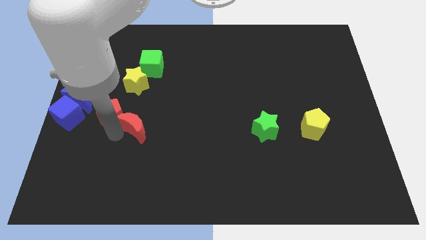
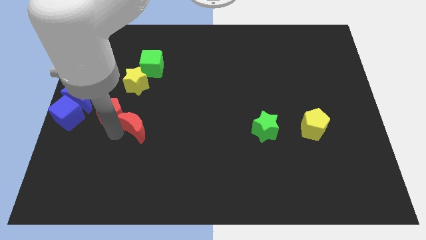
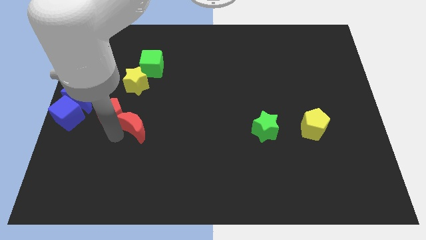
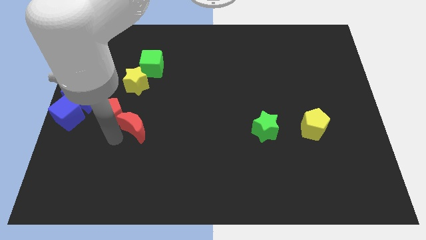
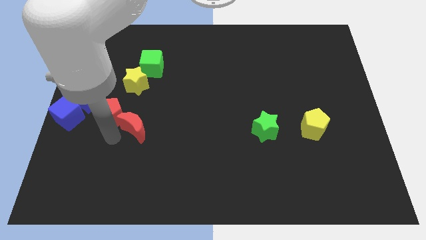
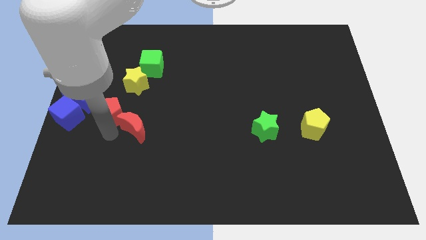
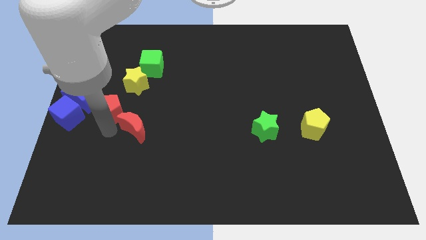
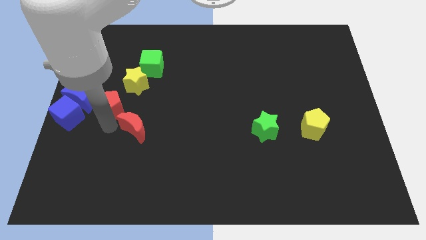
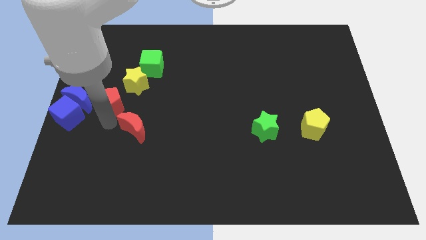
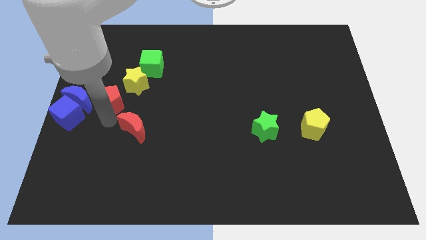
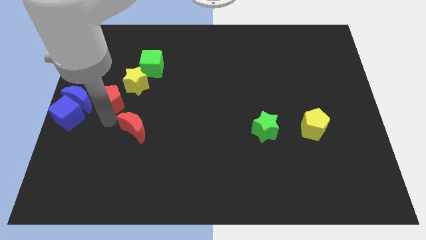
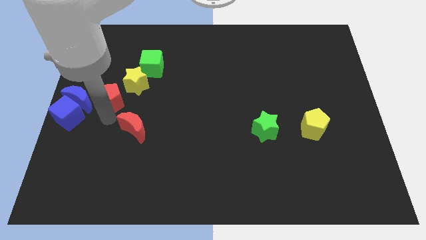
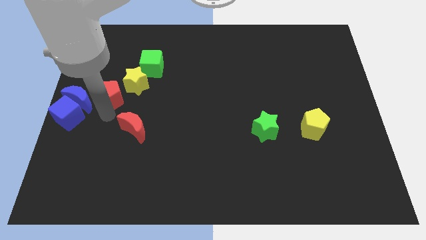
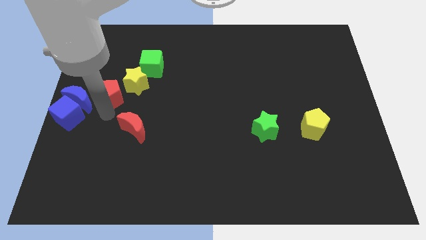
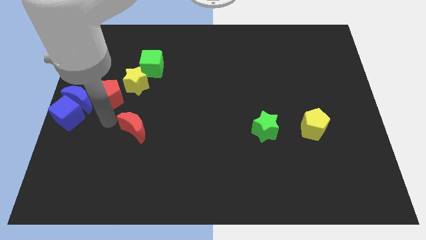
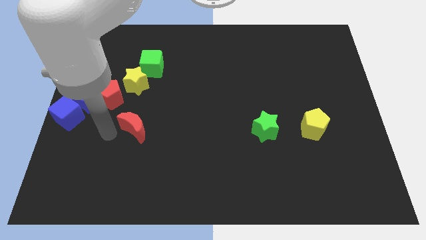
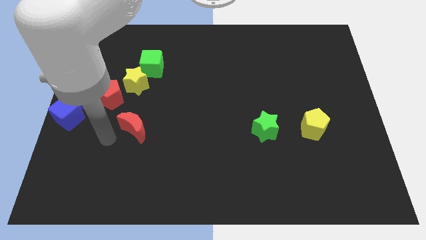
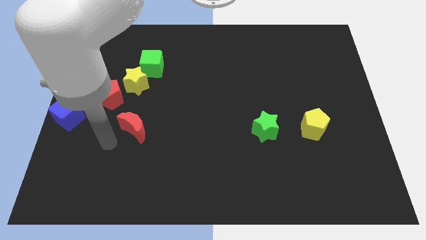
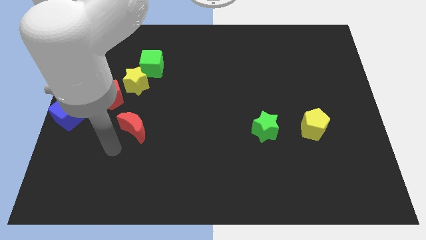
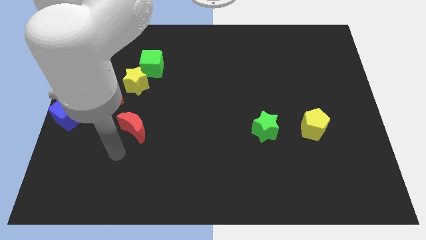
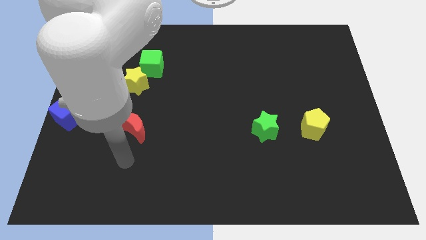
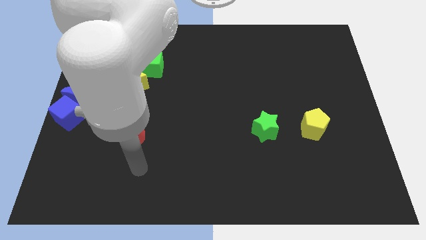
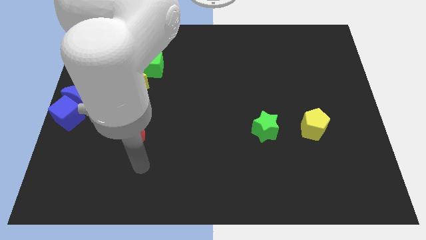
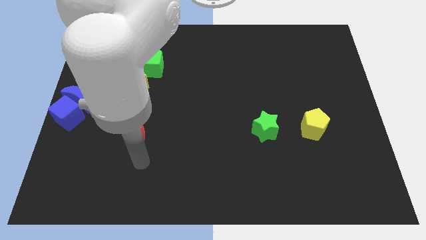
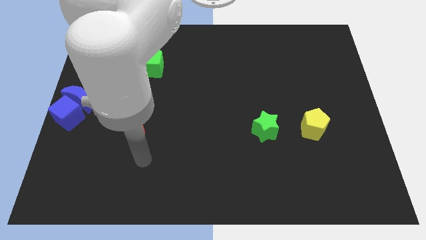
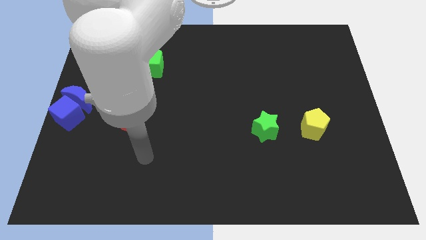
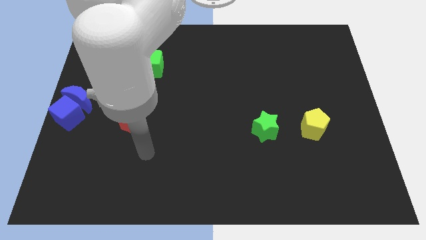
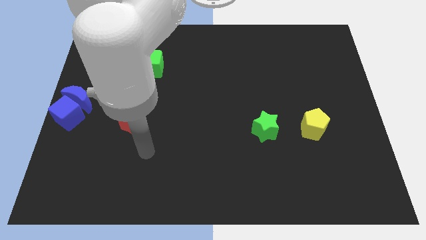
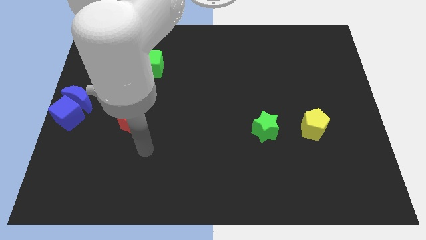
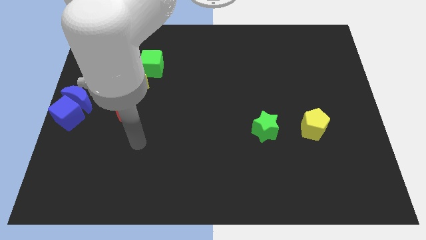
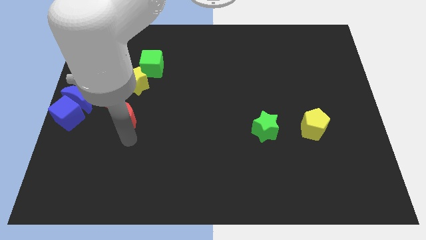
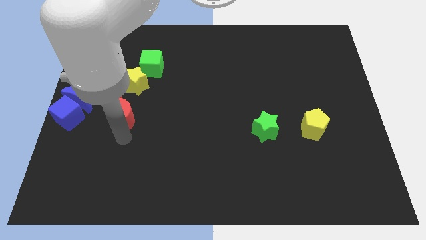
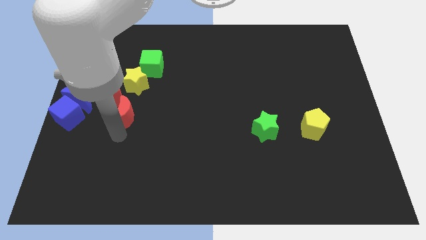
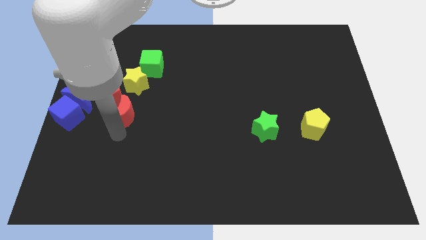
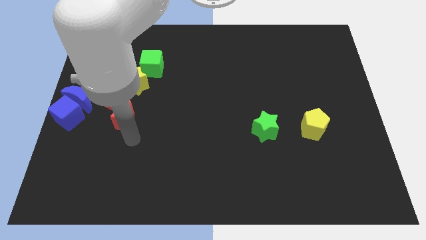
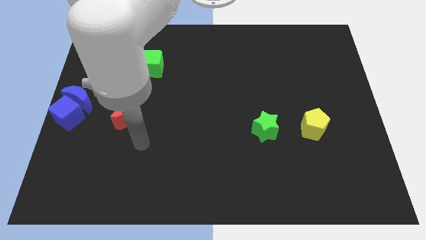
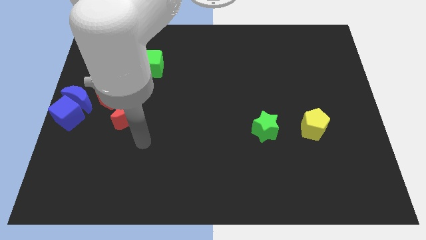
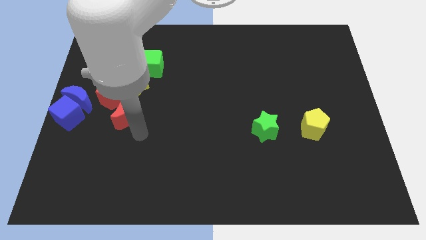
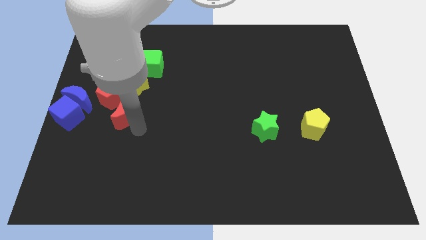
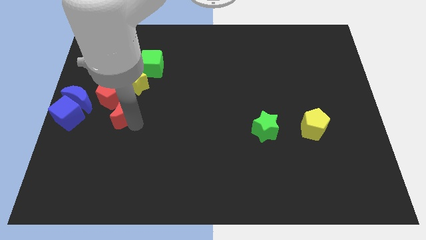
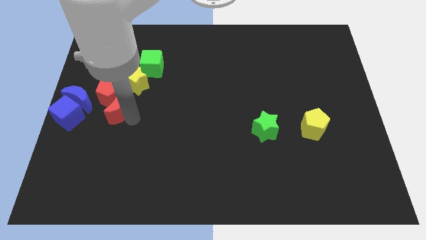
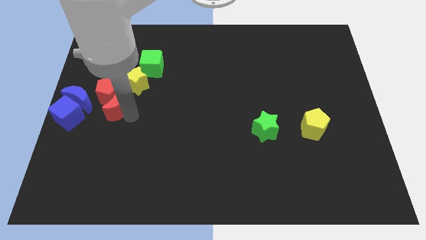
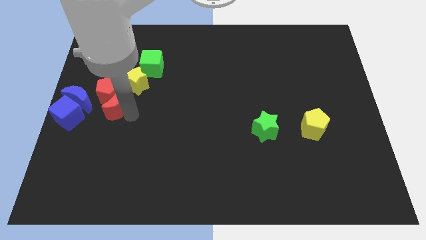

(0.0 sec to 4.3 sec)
move the red moon near the red pentagon

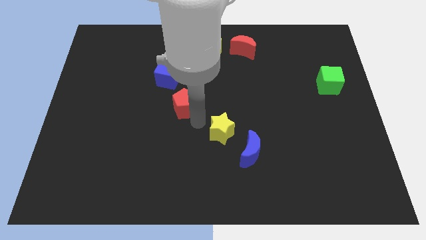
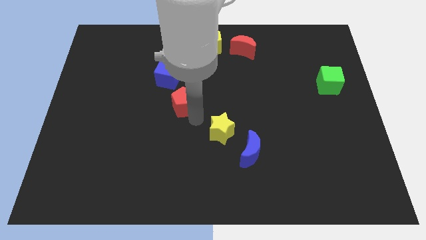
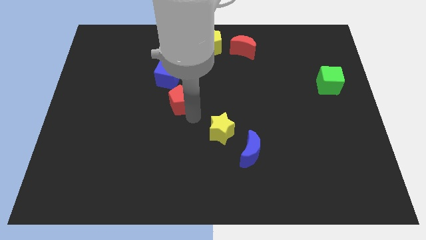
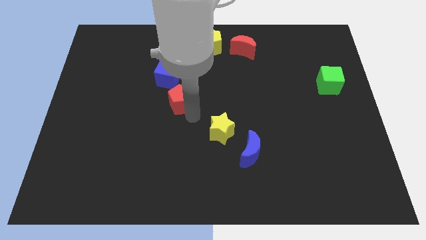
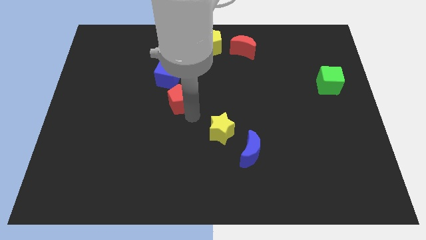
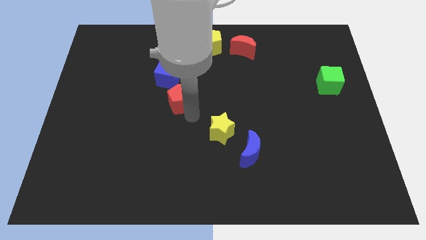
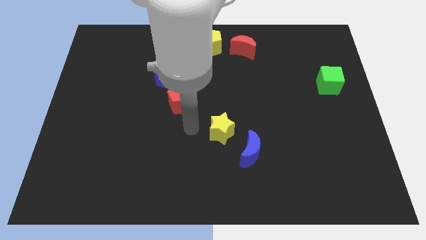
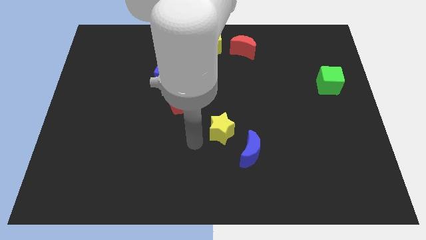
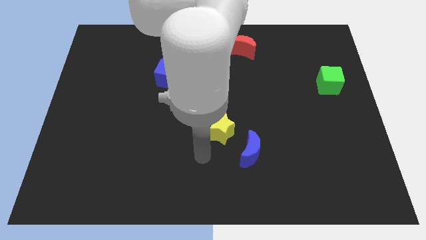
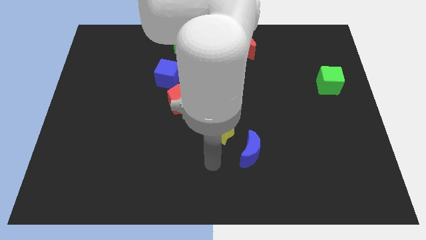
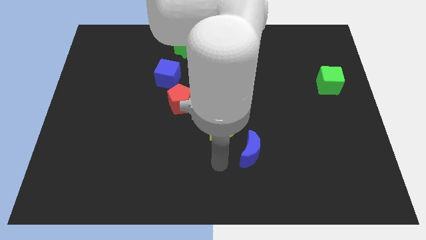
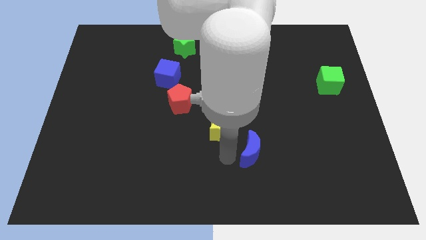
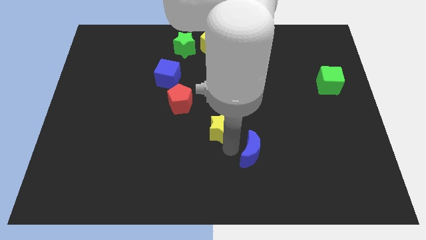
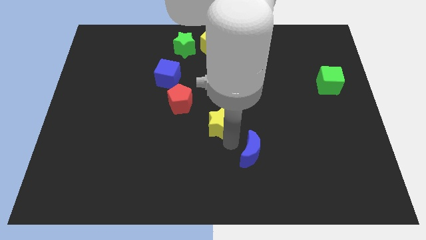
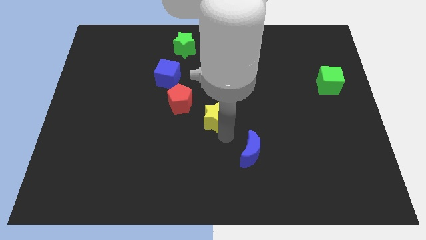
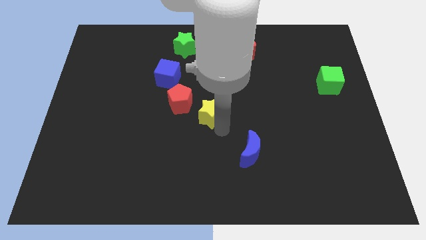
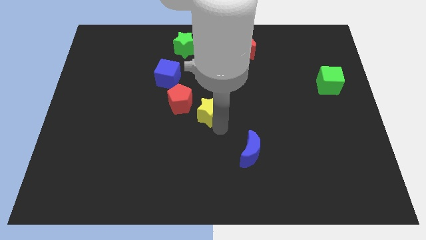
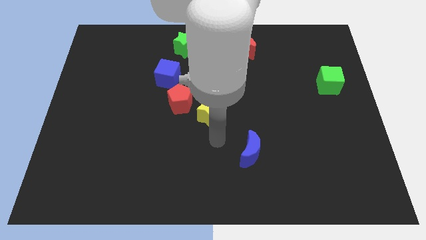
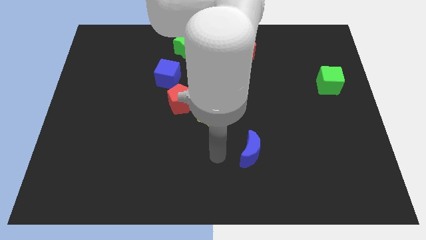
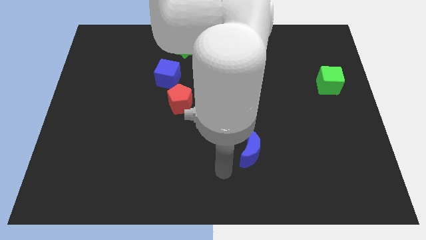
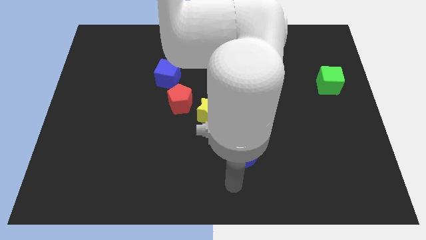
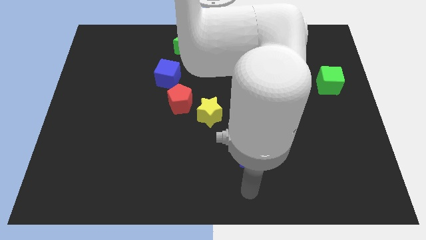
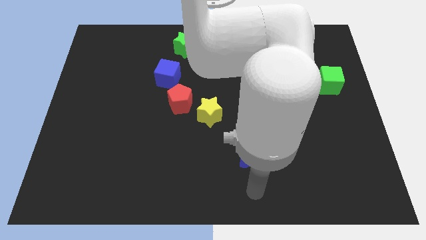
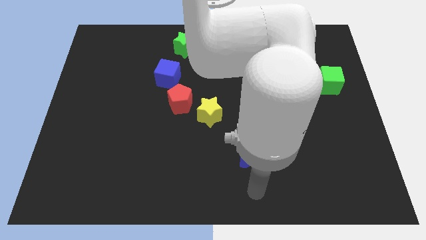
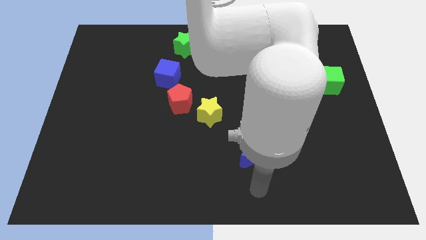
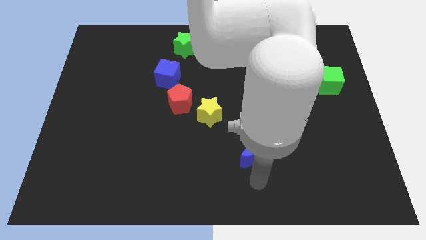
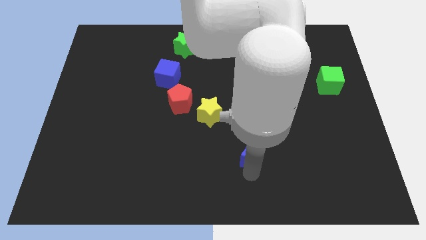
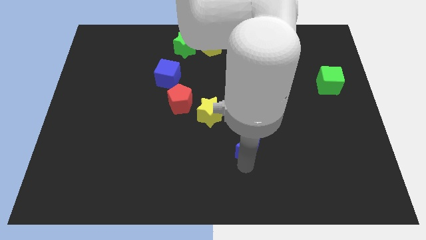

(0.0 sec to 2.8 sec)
push the red pentagon and yellow star center

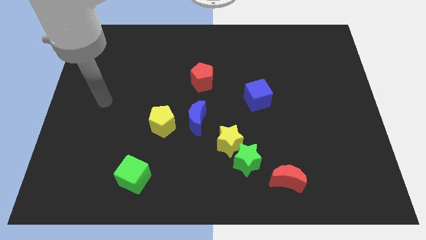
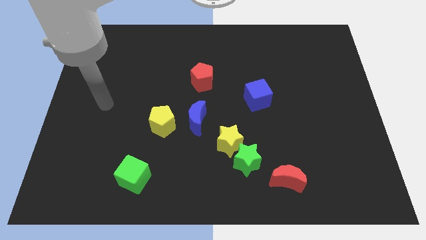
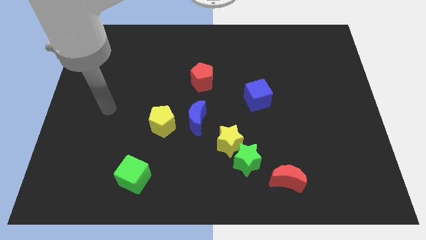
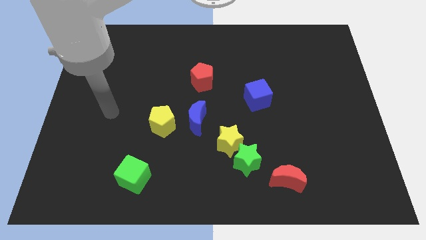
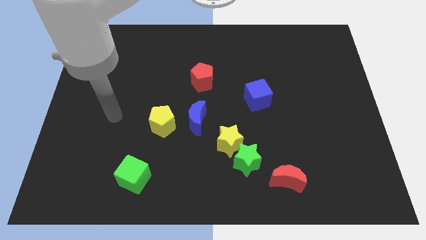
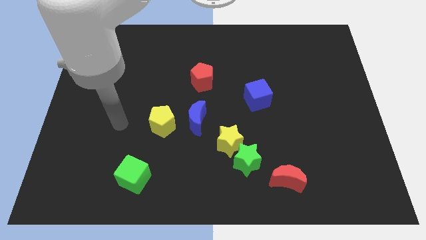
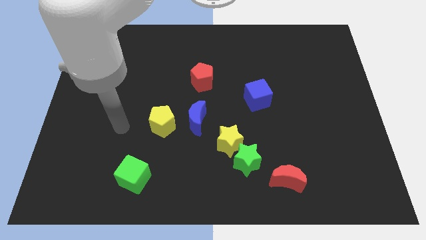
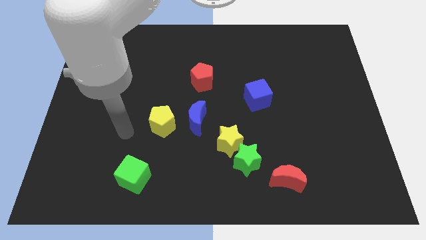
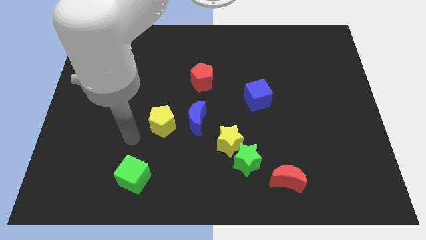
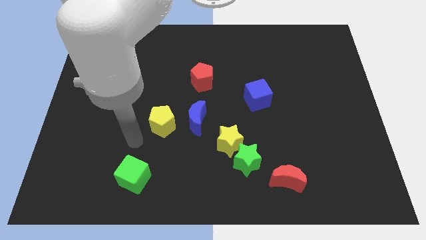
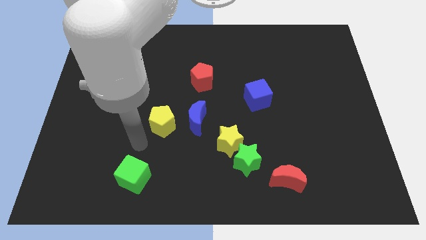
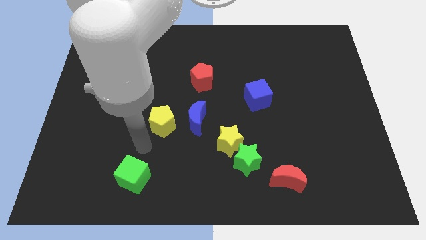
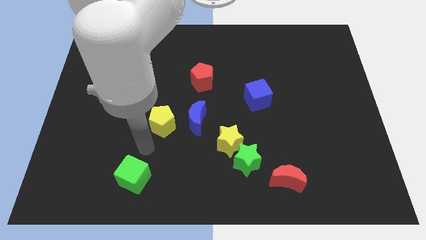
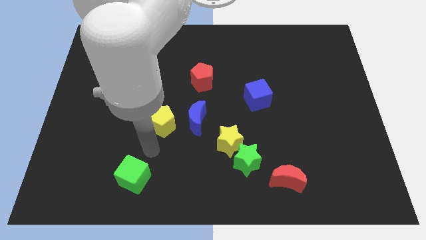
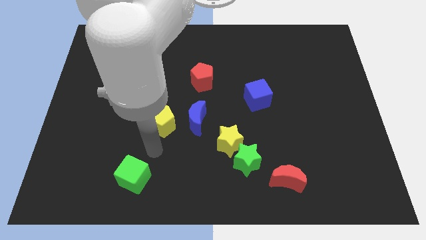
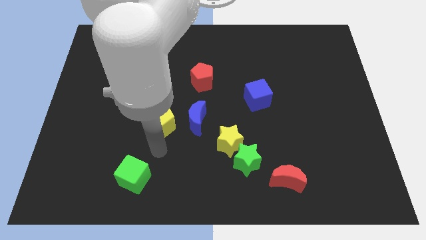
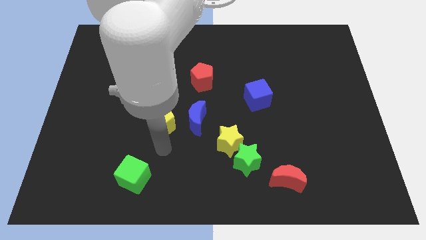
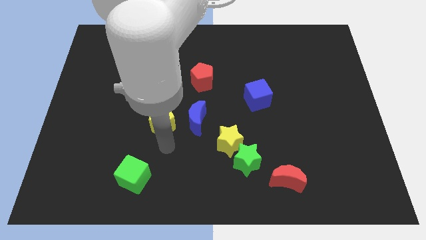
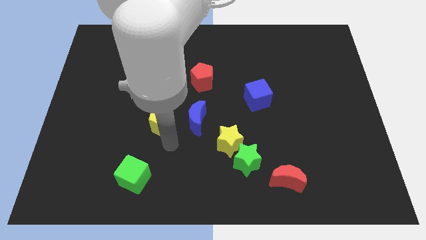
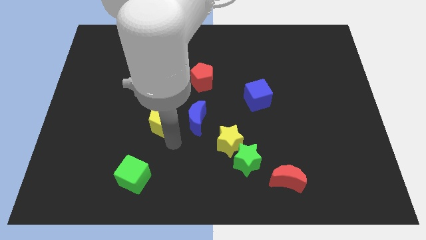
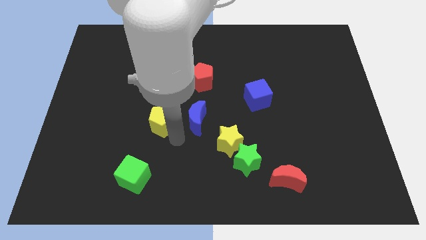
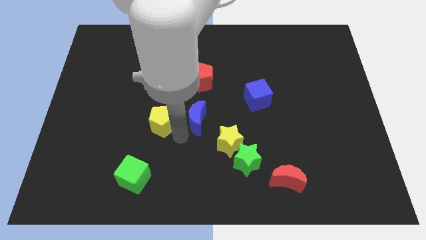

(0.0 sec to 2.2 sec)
move the arm near to the blue crescent
